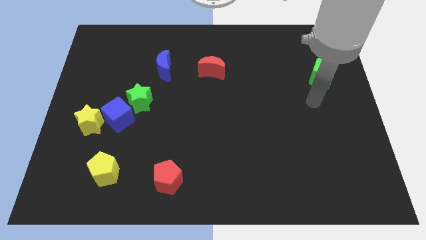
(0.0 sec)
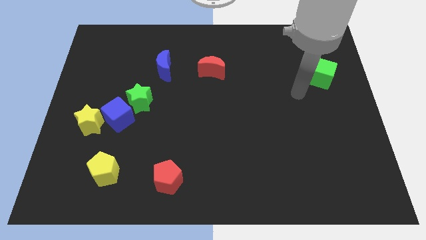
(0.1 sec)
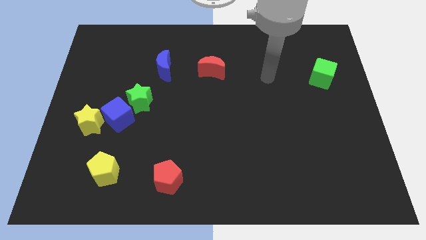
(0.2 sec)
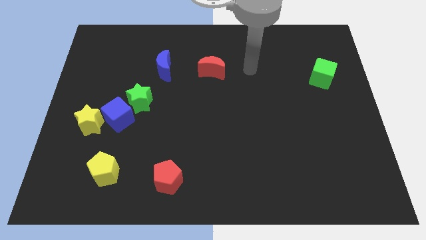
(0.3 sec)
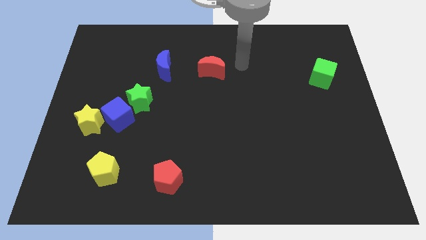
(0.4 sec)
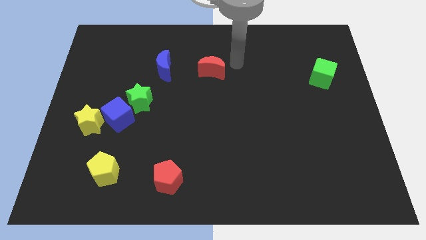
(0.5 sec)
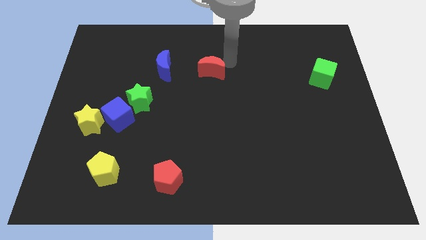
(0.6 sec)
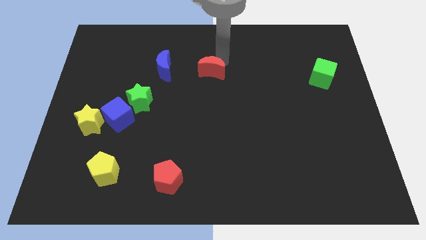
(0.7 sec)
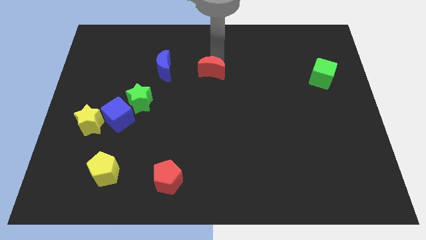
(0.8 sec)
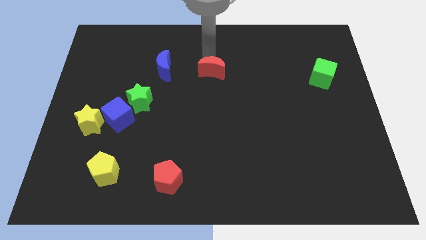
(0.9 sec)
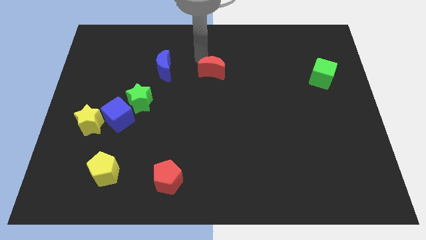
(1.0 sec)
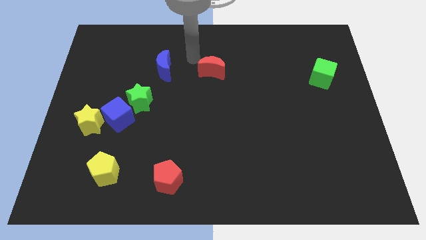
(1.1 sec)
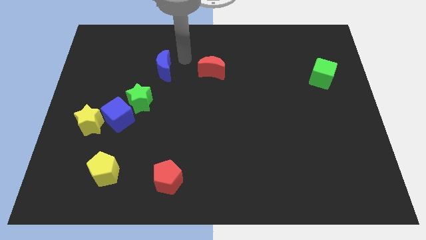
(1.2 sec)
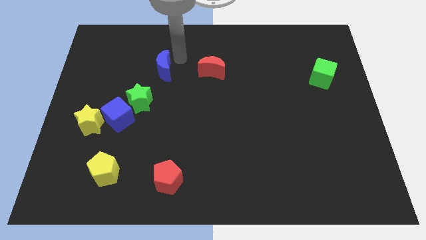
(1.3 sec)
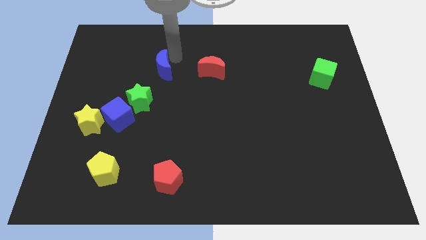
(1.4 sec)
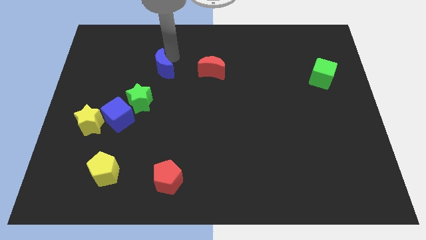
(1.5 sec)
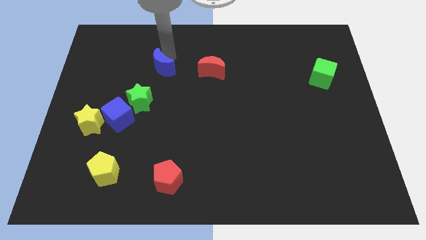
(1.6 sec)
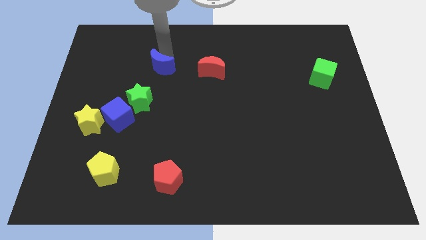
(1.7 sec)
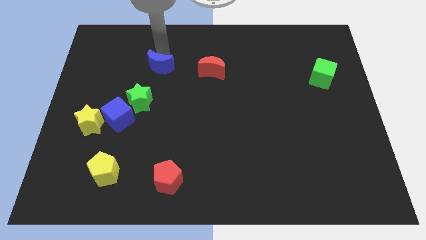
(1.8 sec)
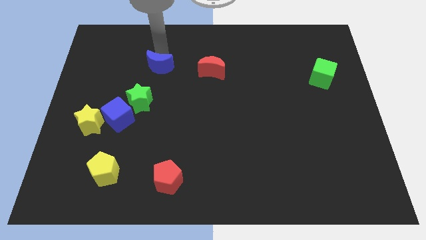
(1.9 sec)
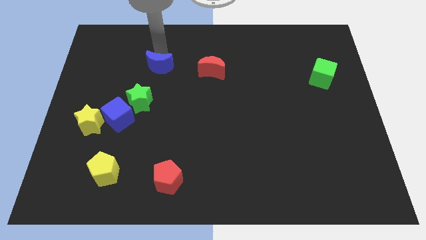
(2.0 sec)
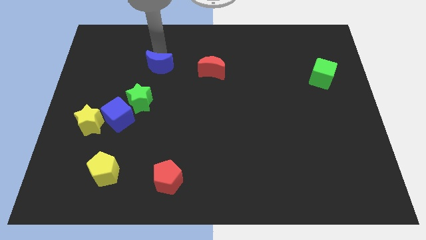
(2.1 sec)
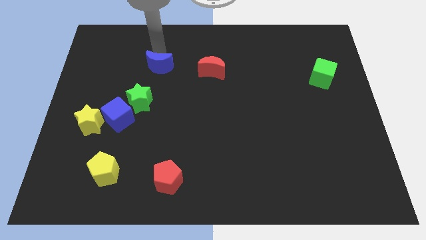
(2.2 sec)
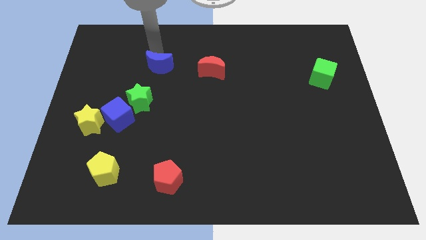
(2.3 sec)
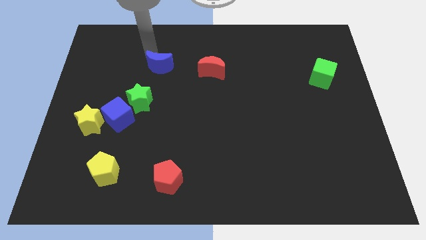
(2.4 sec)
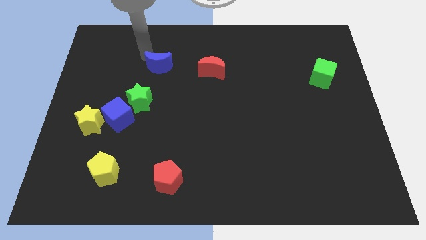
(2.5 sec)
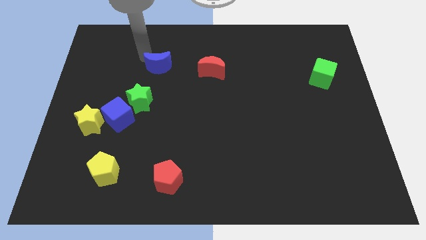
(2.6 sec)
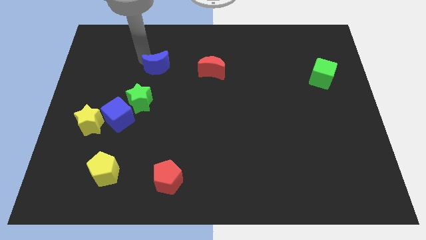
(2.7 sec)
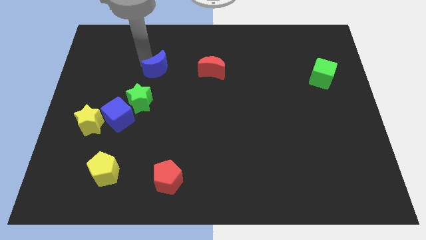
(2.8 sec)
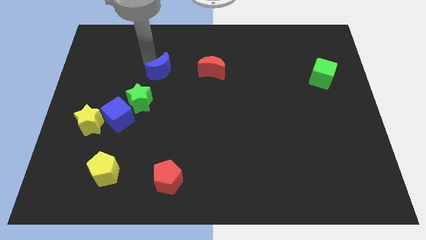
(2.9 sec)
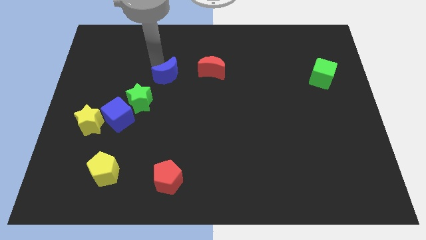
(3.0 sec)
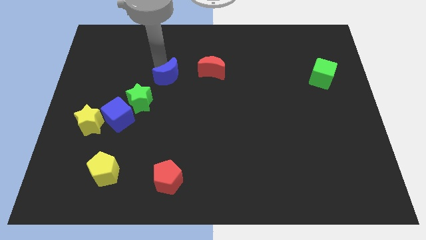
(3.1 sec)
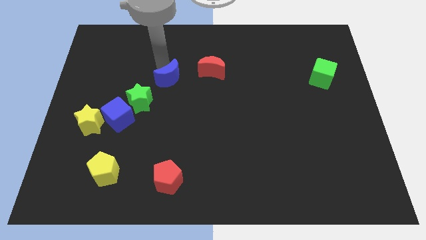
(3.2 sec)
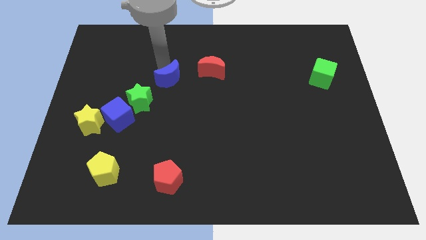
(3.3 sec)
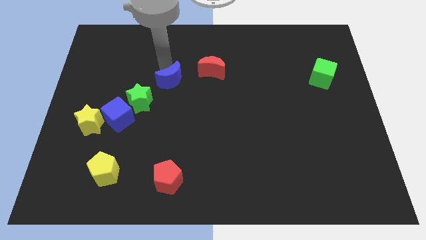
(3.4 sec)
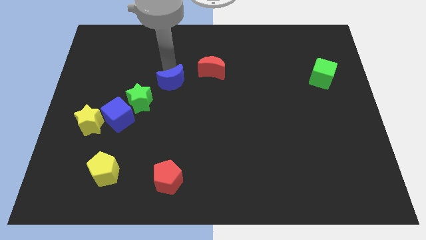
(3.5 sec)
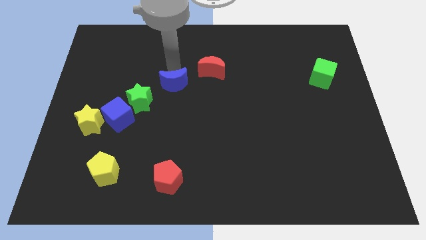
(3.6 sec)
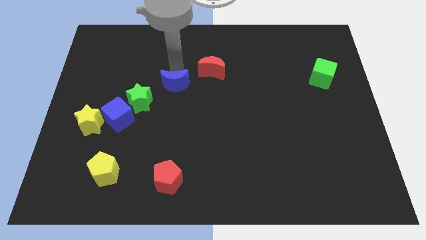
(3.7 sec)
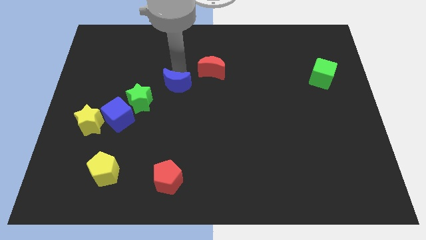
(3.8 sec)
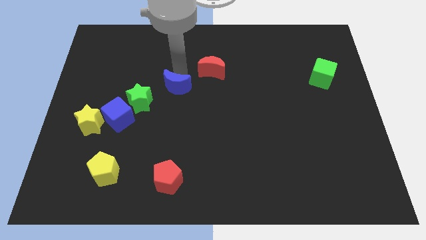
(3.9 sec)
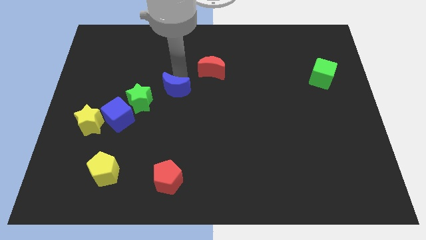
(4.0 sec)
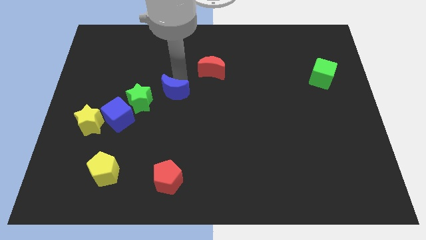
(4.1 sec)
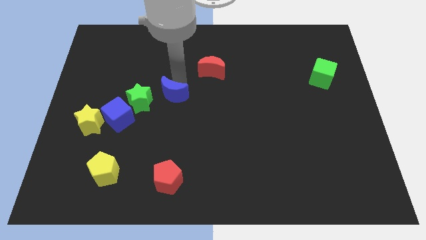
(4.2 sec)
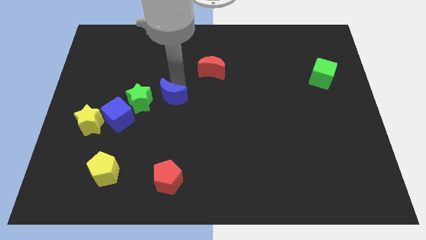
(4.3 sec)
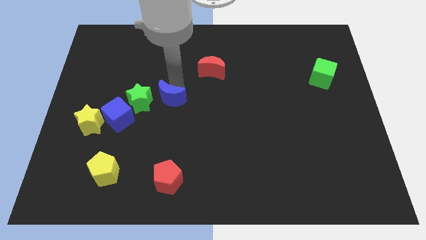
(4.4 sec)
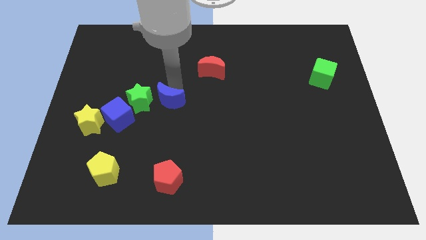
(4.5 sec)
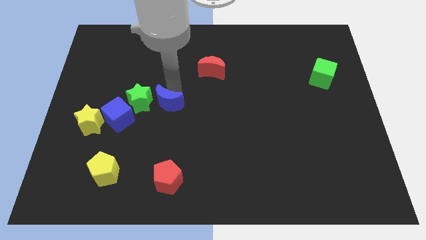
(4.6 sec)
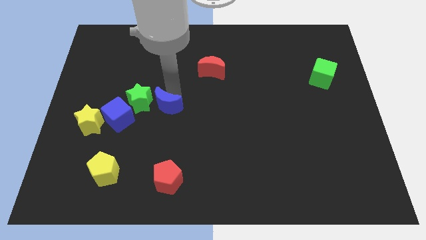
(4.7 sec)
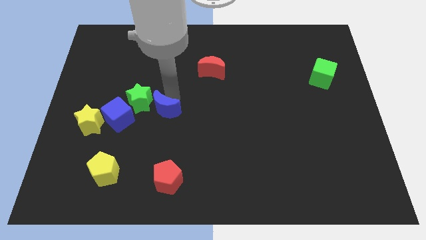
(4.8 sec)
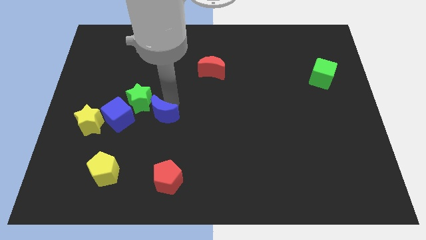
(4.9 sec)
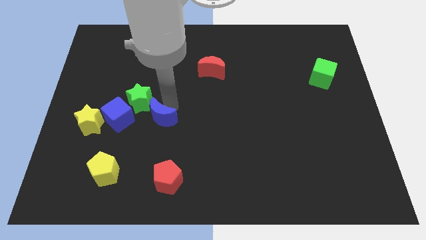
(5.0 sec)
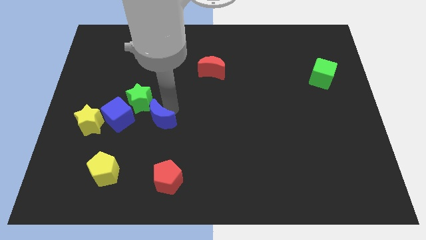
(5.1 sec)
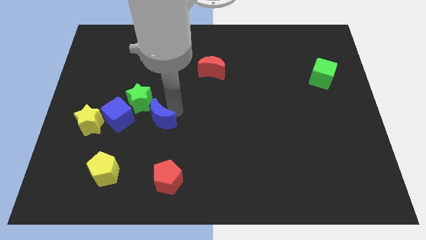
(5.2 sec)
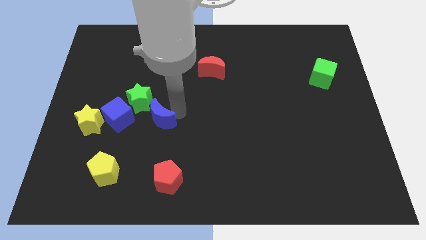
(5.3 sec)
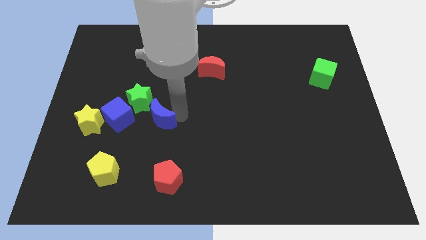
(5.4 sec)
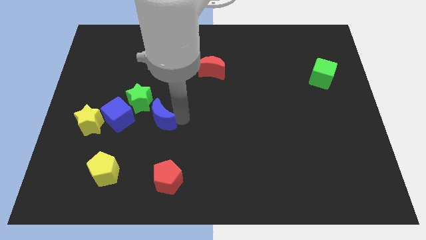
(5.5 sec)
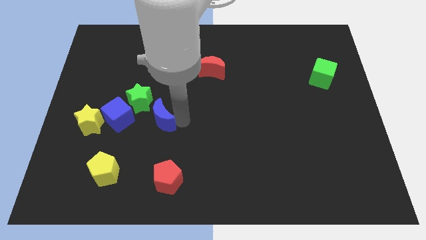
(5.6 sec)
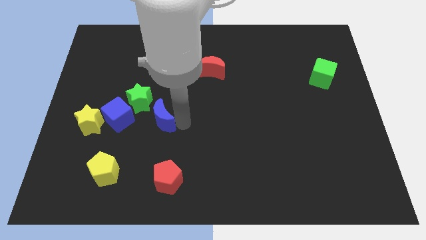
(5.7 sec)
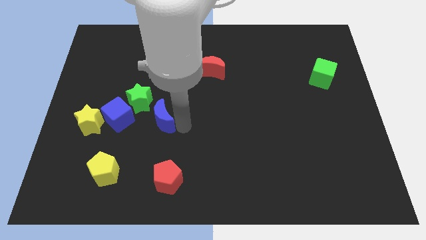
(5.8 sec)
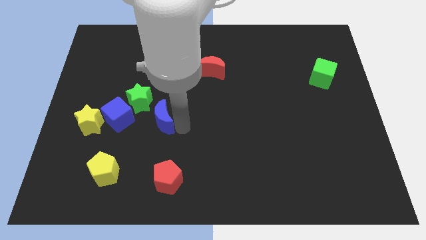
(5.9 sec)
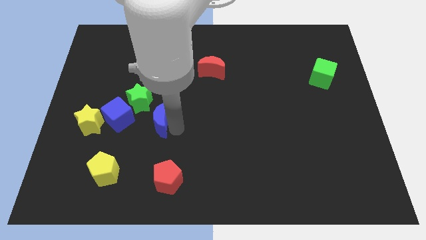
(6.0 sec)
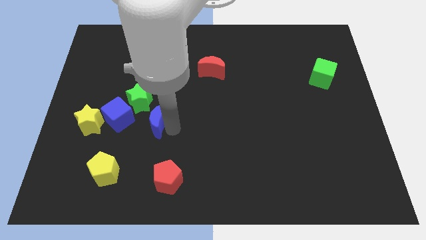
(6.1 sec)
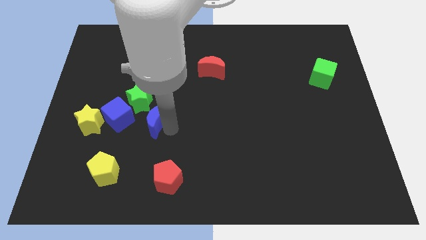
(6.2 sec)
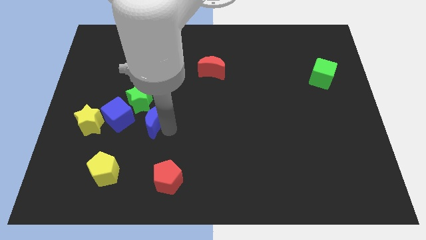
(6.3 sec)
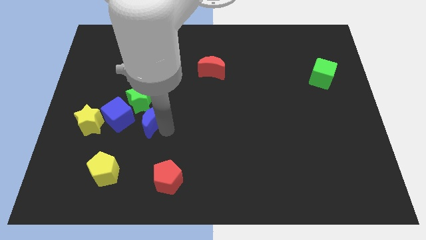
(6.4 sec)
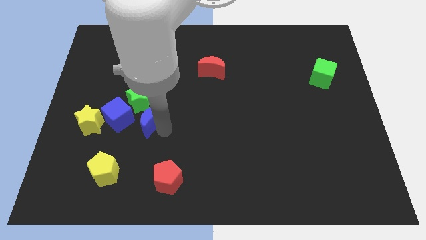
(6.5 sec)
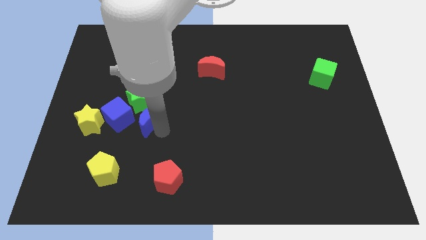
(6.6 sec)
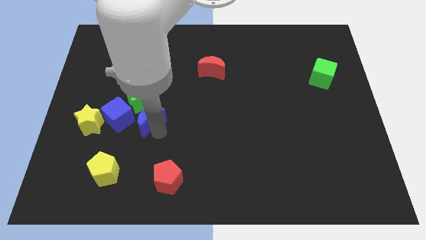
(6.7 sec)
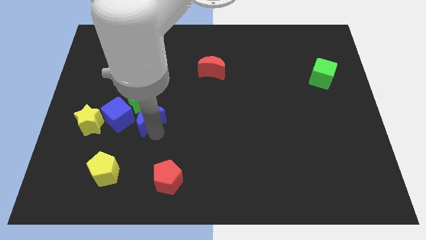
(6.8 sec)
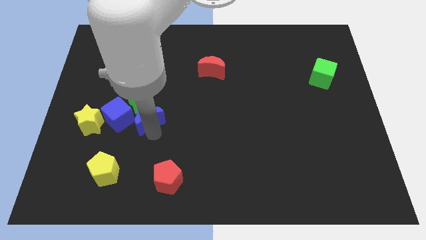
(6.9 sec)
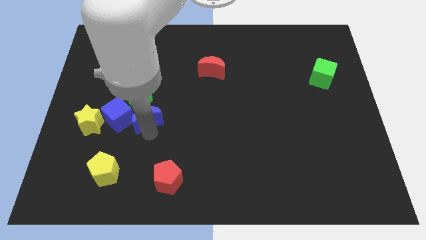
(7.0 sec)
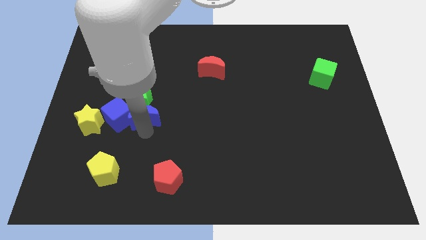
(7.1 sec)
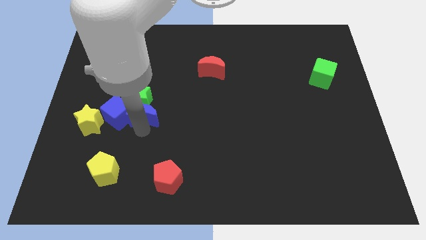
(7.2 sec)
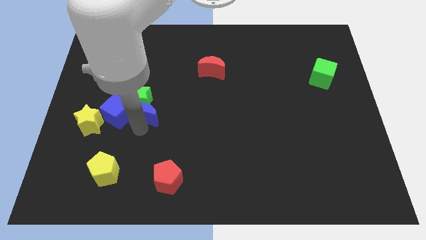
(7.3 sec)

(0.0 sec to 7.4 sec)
move the blue moon to the blue cube

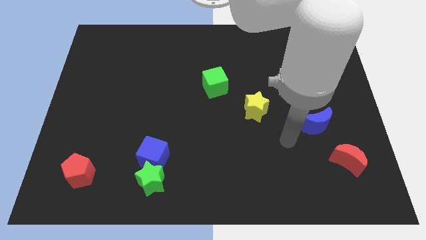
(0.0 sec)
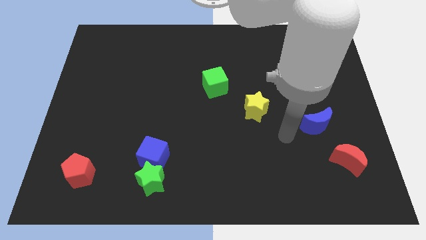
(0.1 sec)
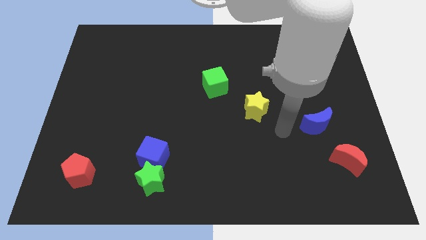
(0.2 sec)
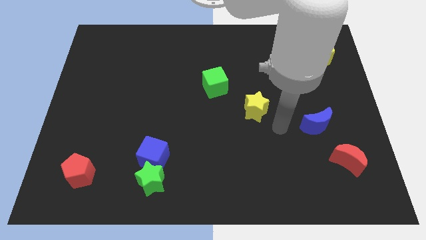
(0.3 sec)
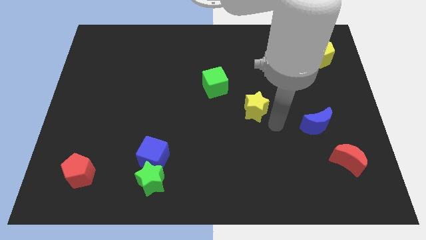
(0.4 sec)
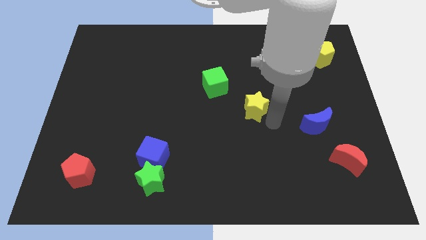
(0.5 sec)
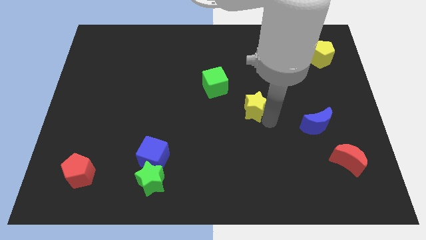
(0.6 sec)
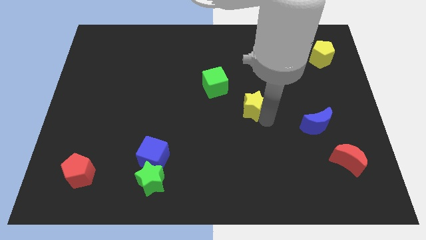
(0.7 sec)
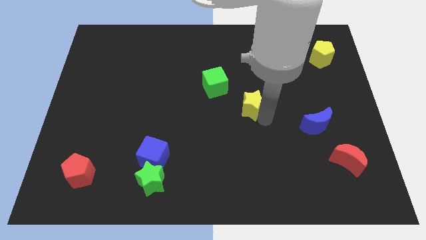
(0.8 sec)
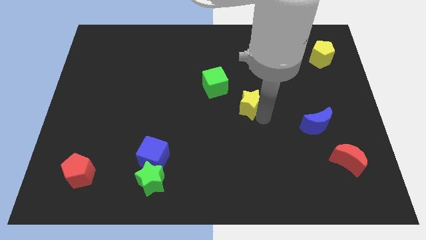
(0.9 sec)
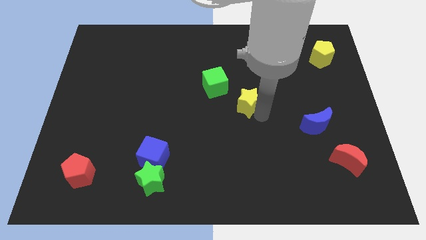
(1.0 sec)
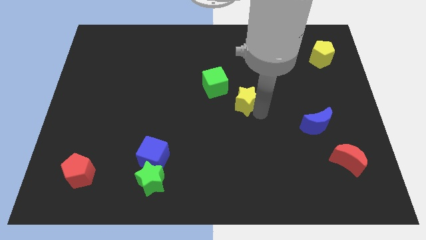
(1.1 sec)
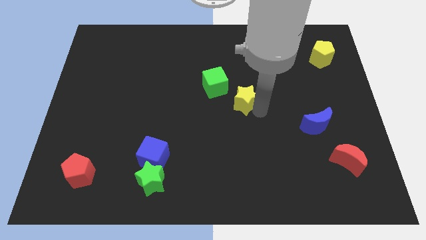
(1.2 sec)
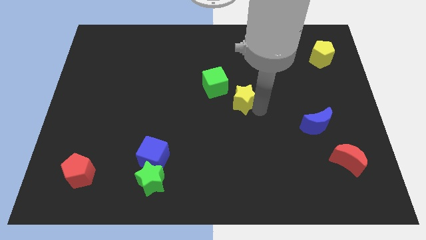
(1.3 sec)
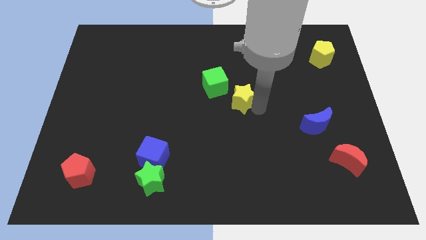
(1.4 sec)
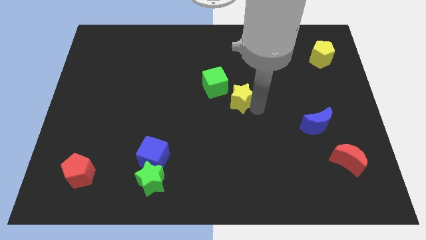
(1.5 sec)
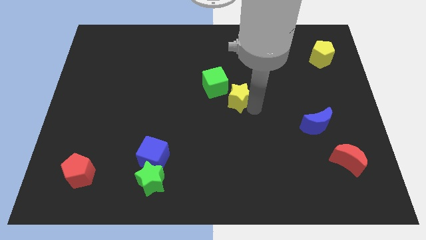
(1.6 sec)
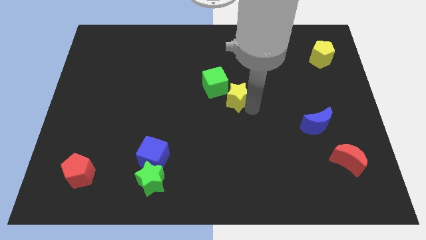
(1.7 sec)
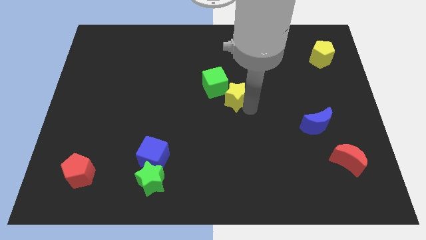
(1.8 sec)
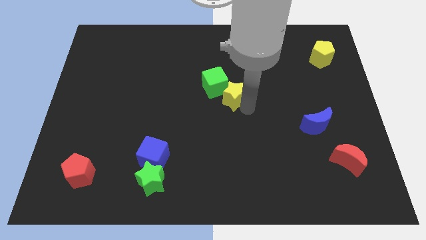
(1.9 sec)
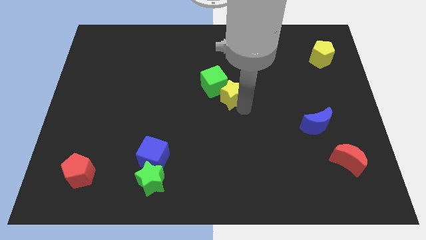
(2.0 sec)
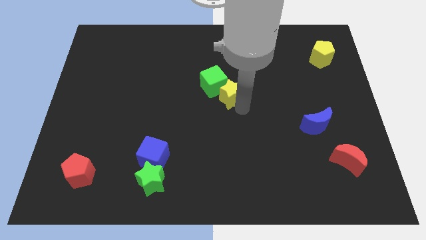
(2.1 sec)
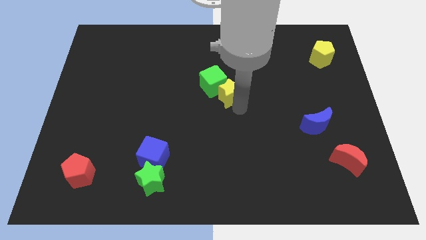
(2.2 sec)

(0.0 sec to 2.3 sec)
put the yellow star to the green cube
